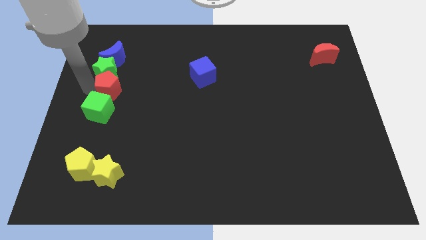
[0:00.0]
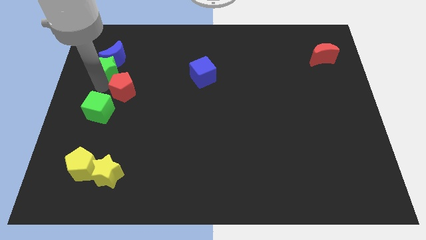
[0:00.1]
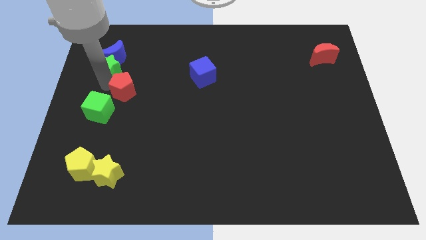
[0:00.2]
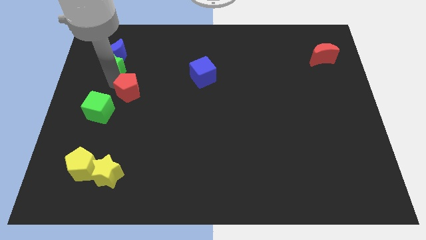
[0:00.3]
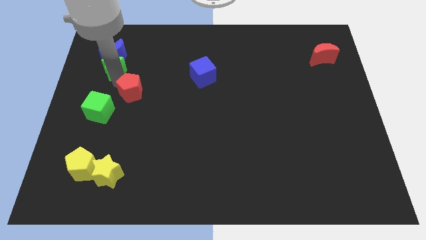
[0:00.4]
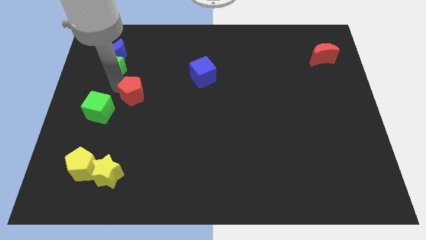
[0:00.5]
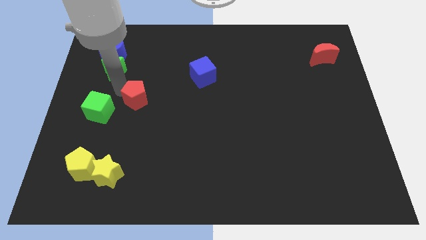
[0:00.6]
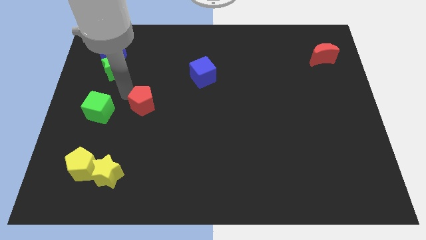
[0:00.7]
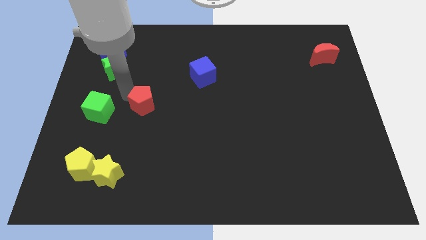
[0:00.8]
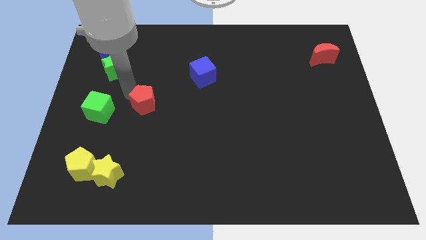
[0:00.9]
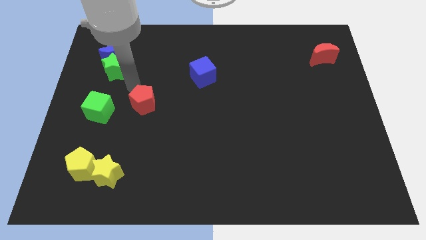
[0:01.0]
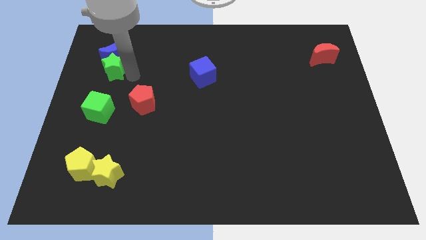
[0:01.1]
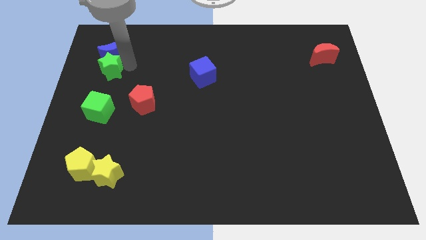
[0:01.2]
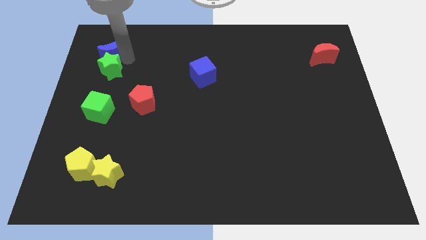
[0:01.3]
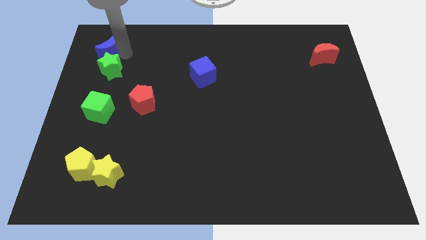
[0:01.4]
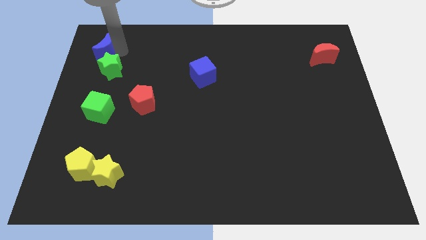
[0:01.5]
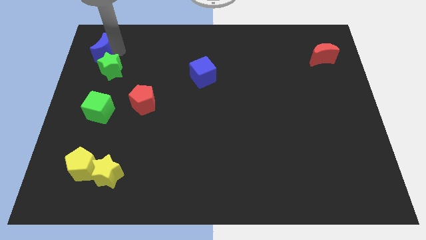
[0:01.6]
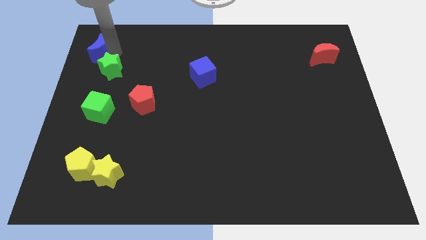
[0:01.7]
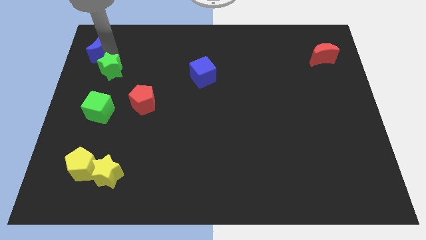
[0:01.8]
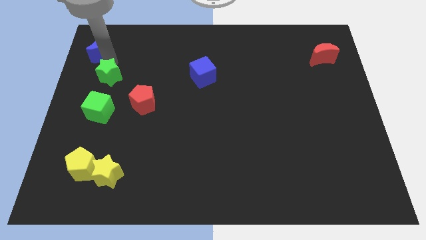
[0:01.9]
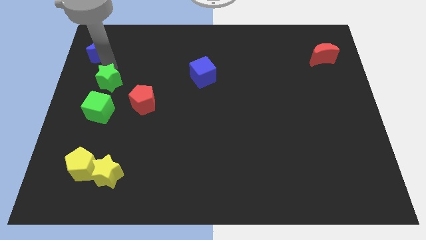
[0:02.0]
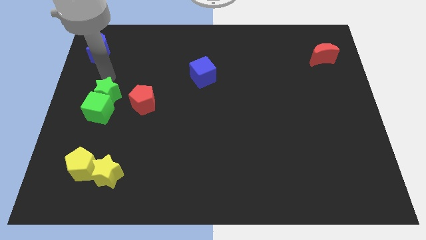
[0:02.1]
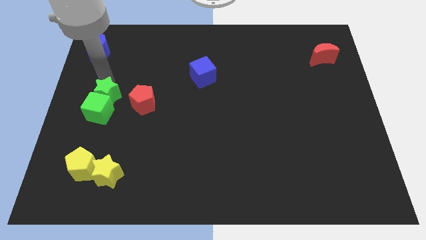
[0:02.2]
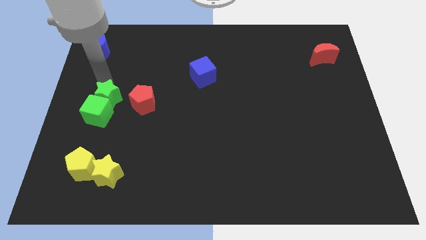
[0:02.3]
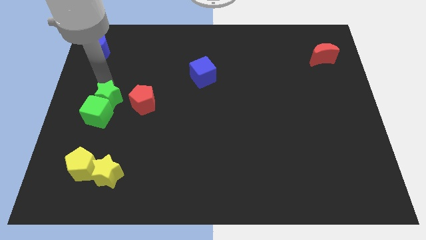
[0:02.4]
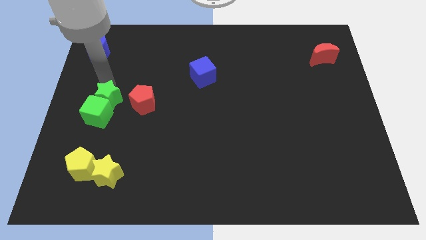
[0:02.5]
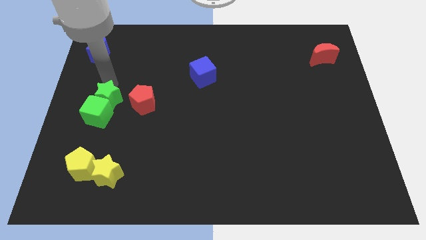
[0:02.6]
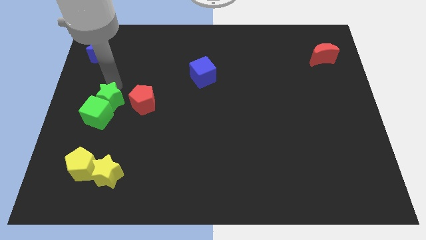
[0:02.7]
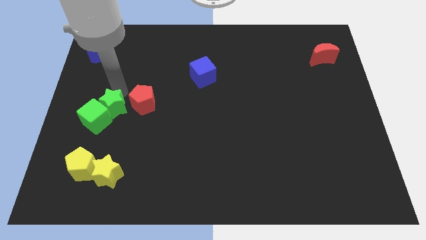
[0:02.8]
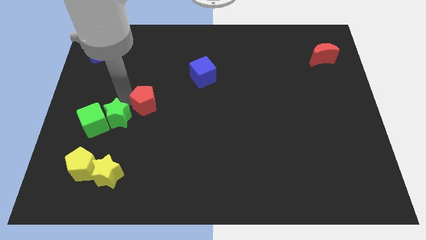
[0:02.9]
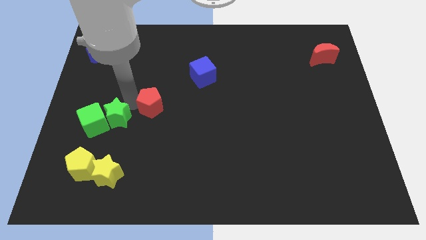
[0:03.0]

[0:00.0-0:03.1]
move the red pentagon green star and green cube diagonally

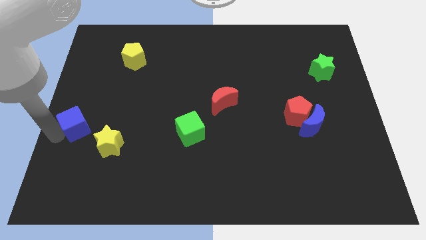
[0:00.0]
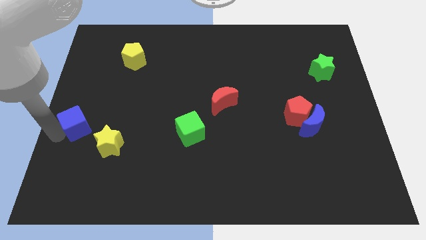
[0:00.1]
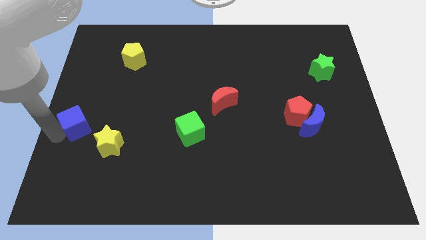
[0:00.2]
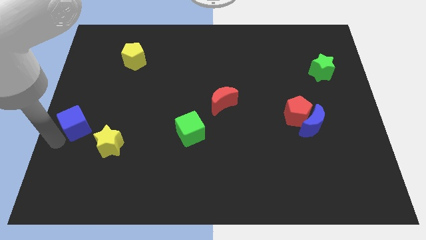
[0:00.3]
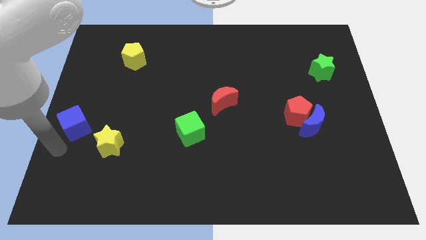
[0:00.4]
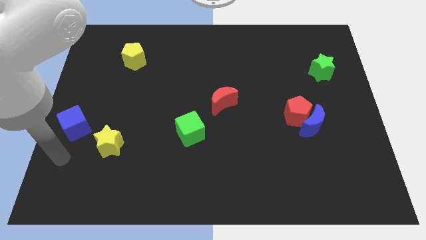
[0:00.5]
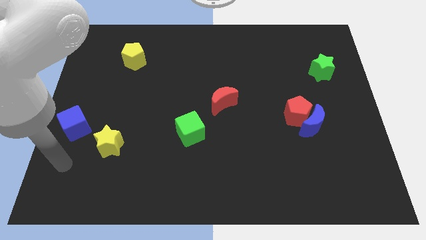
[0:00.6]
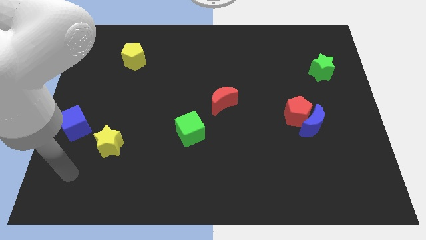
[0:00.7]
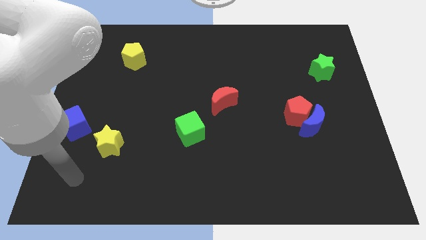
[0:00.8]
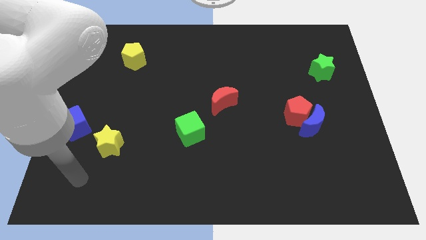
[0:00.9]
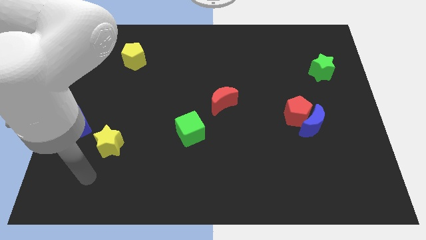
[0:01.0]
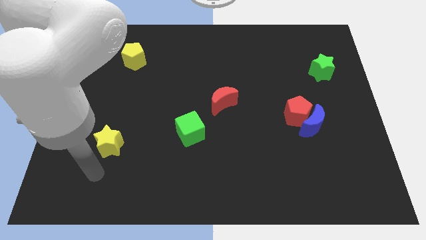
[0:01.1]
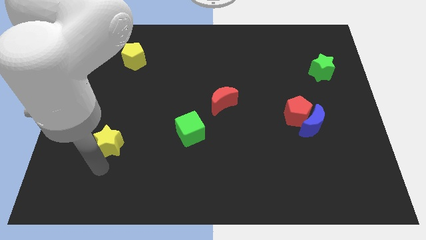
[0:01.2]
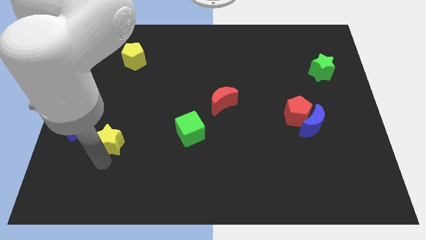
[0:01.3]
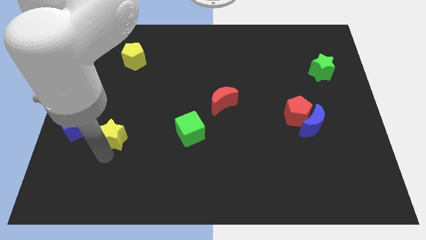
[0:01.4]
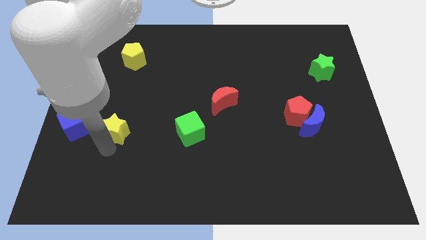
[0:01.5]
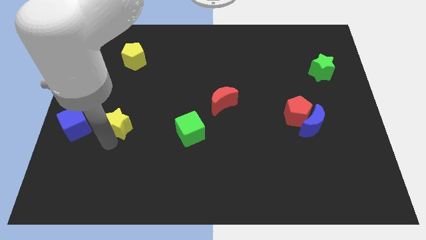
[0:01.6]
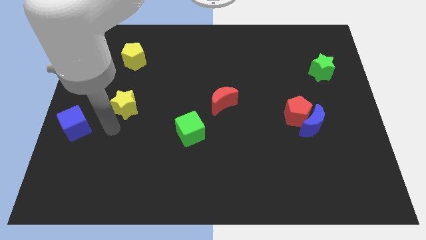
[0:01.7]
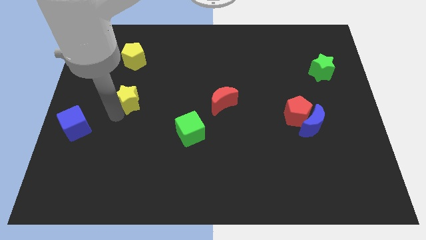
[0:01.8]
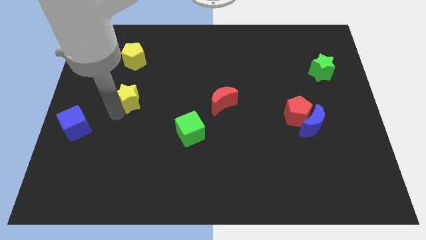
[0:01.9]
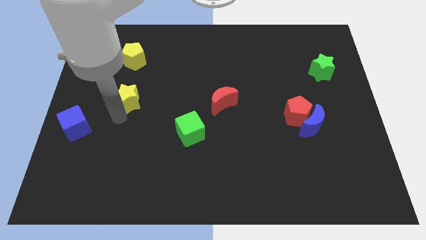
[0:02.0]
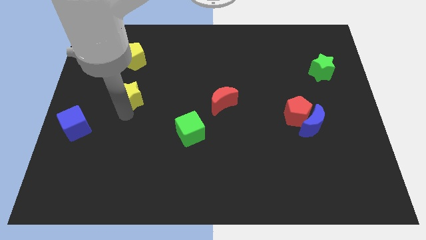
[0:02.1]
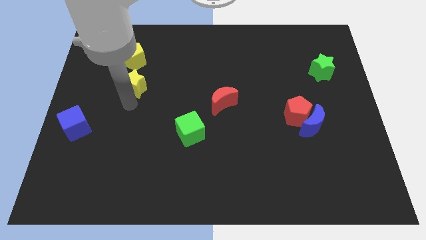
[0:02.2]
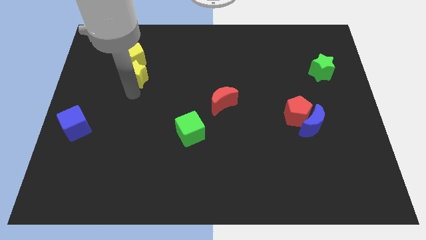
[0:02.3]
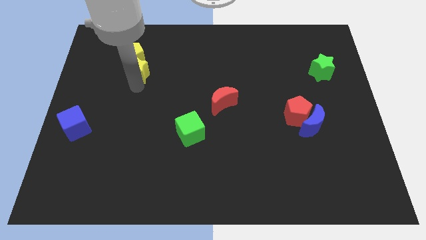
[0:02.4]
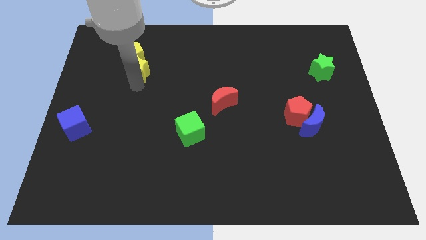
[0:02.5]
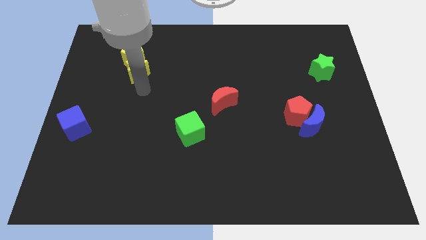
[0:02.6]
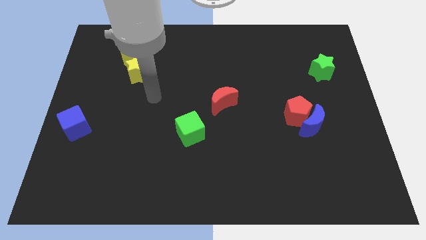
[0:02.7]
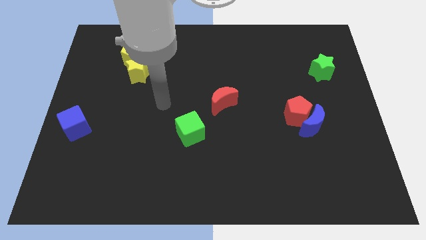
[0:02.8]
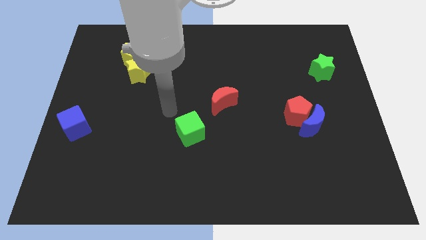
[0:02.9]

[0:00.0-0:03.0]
move the yellow star into the yellow pentagon

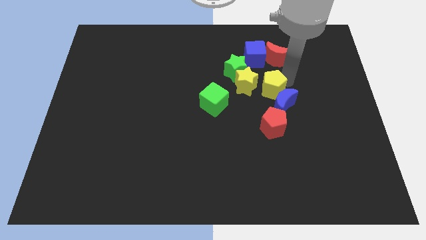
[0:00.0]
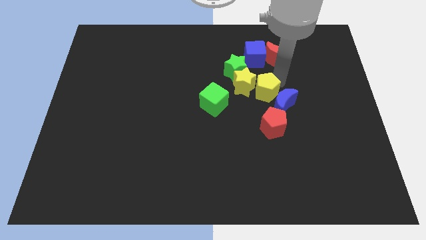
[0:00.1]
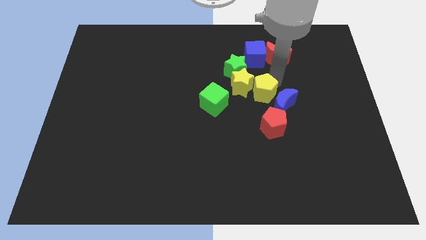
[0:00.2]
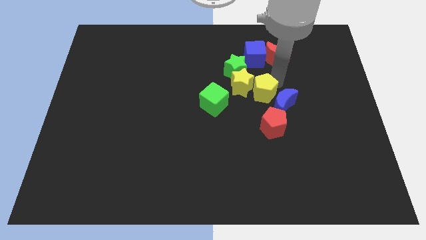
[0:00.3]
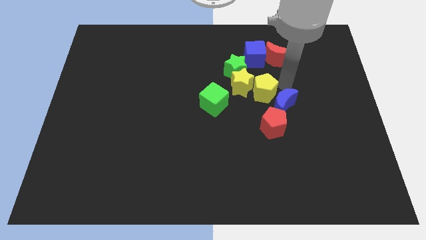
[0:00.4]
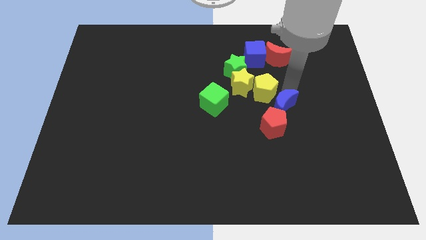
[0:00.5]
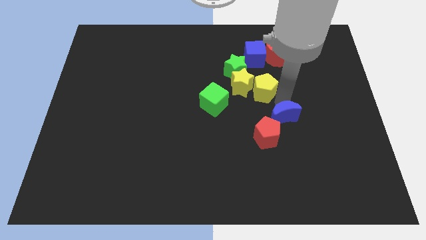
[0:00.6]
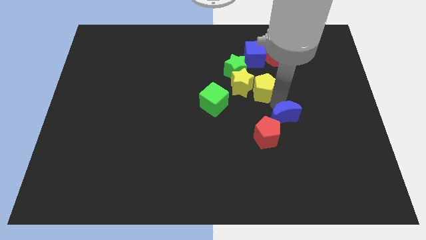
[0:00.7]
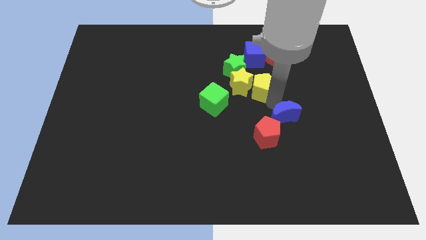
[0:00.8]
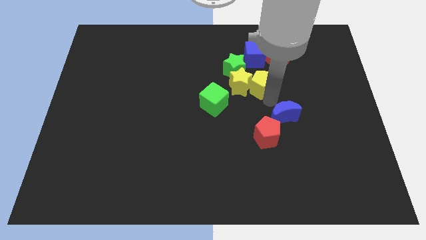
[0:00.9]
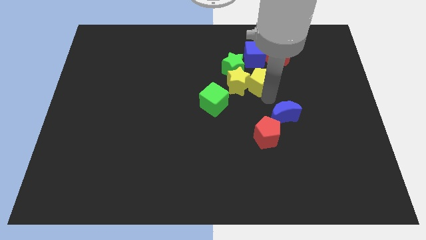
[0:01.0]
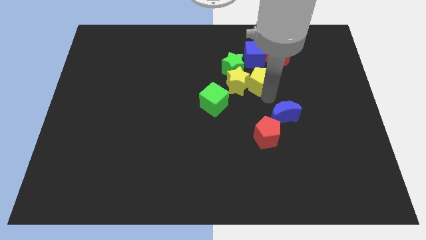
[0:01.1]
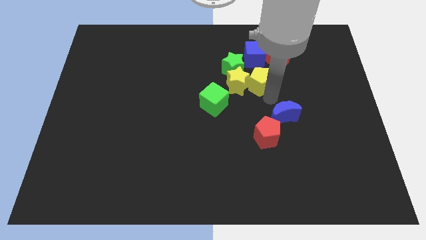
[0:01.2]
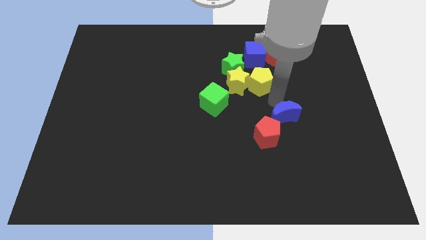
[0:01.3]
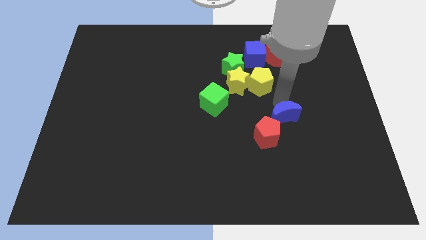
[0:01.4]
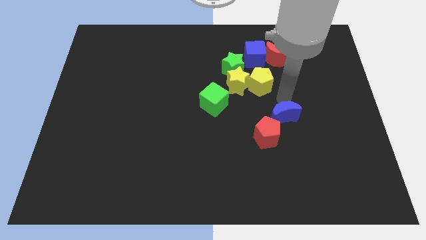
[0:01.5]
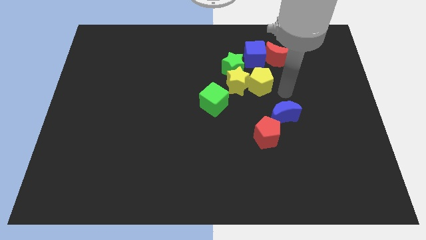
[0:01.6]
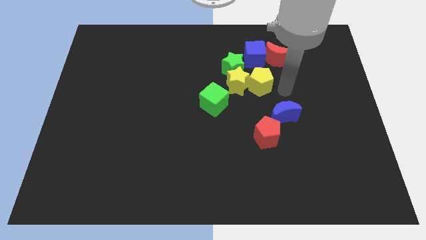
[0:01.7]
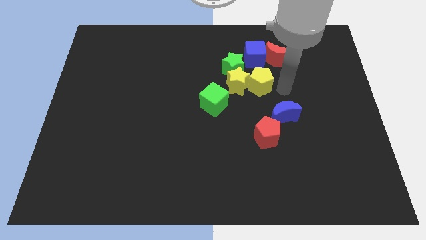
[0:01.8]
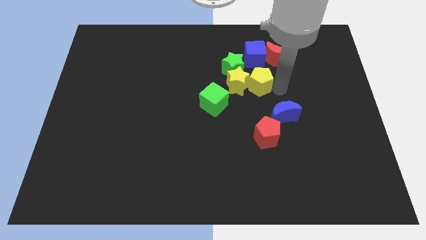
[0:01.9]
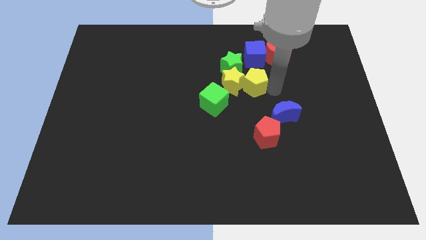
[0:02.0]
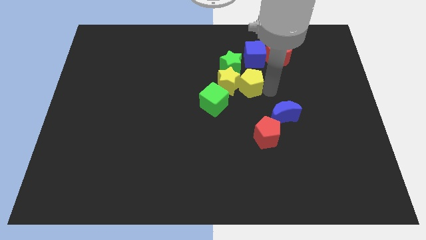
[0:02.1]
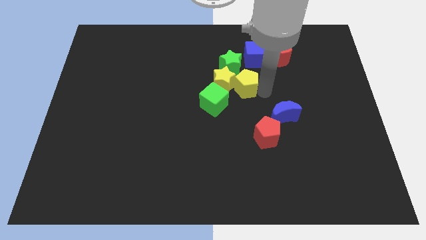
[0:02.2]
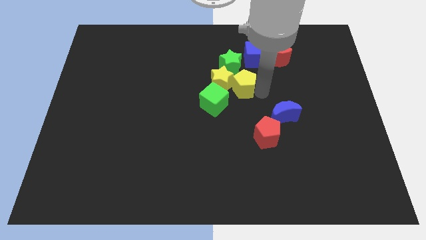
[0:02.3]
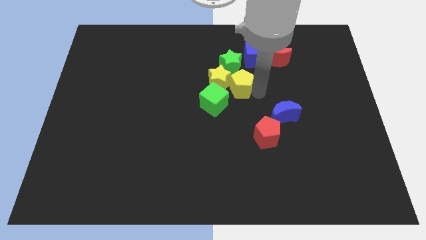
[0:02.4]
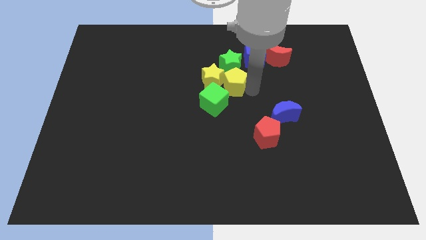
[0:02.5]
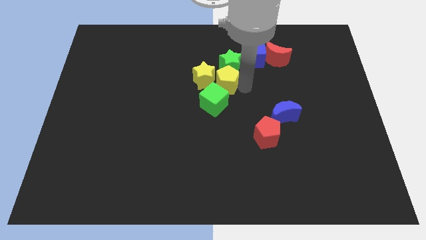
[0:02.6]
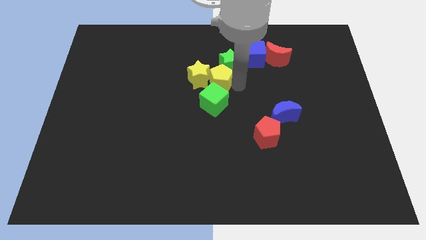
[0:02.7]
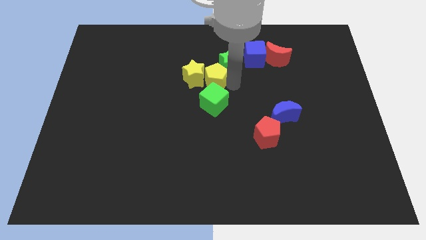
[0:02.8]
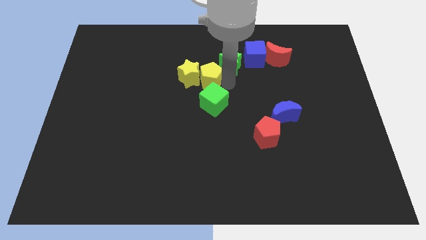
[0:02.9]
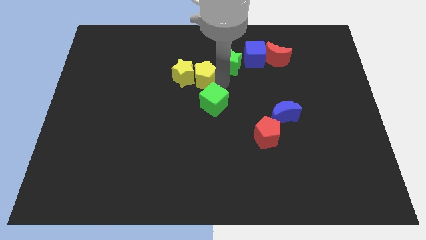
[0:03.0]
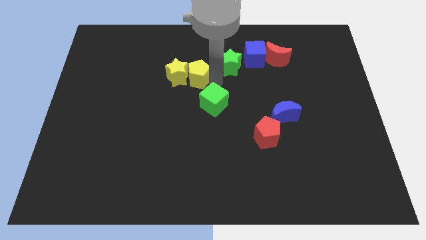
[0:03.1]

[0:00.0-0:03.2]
move the yellow pentagon and yellow star away from blue cubegreen stared moon
